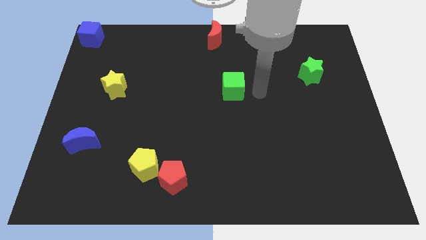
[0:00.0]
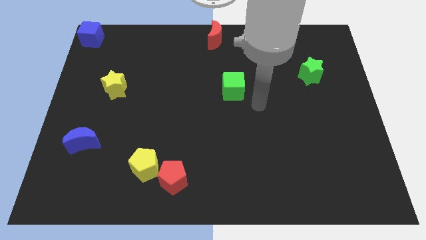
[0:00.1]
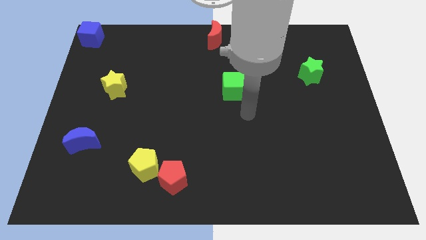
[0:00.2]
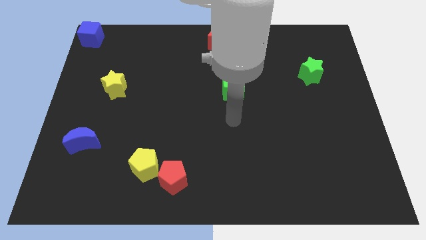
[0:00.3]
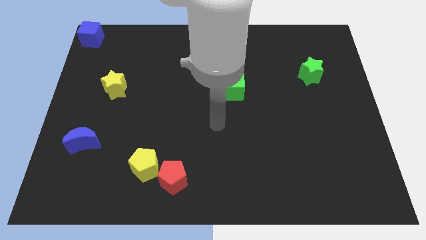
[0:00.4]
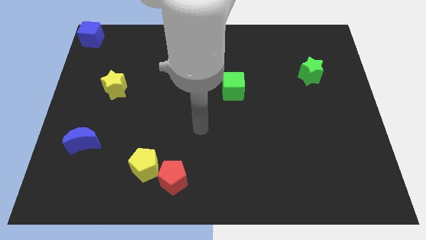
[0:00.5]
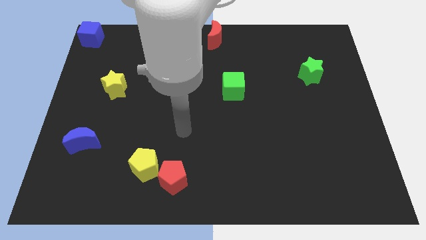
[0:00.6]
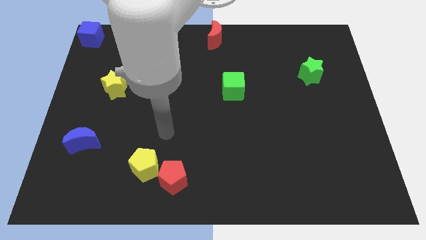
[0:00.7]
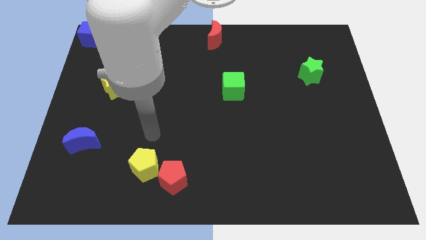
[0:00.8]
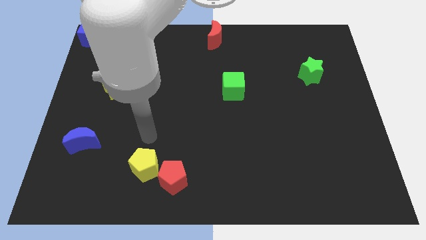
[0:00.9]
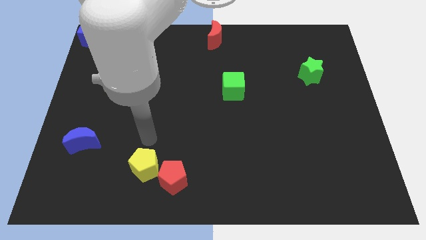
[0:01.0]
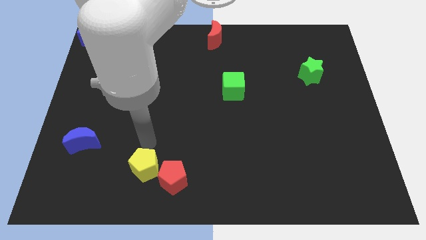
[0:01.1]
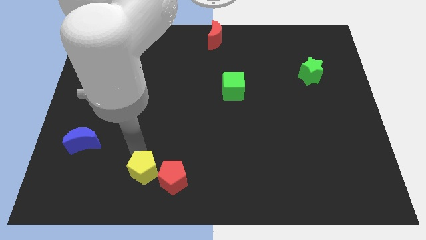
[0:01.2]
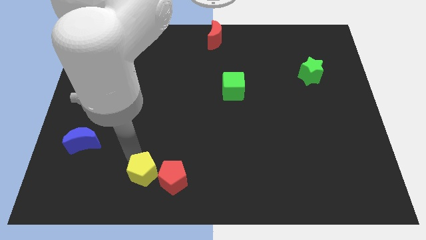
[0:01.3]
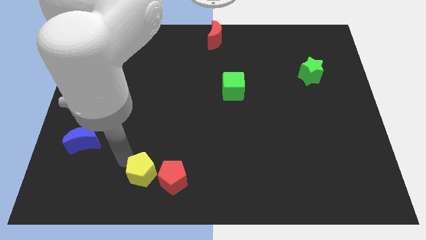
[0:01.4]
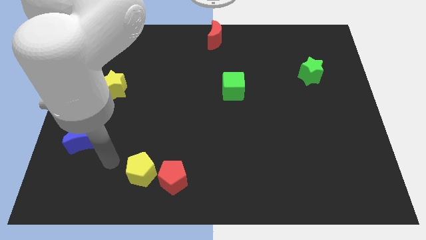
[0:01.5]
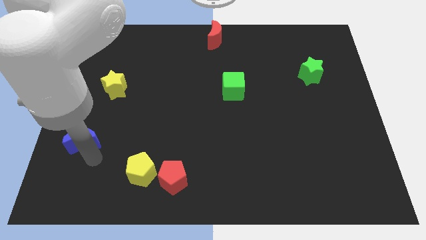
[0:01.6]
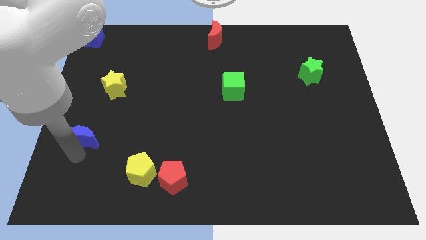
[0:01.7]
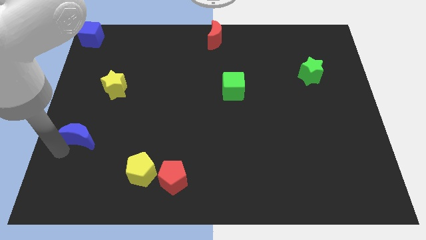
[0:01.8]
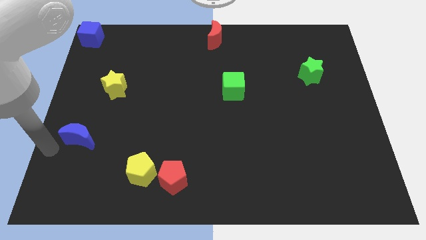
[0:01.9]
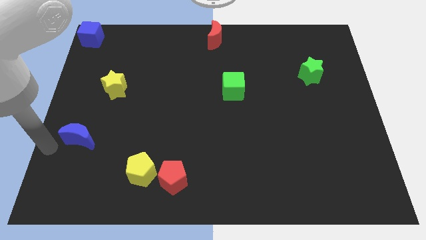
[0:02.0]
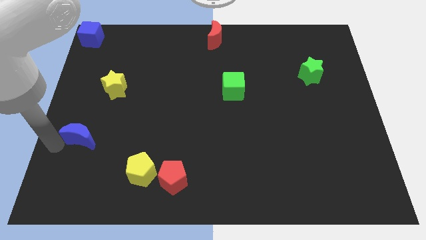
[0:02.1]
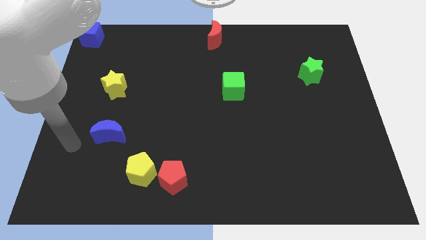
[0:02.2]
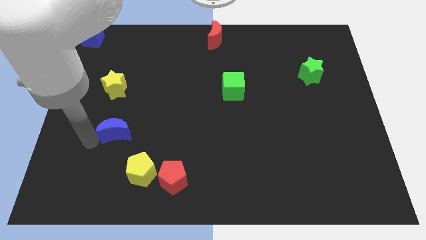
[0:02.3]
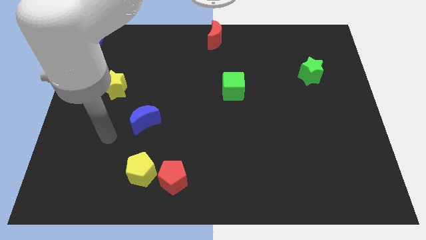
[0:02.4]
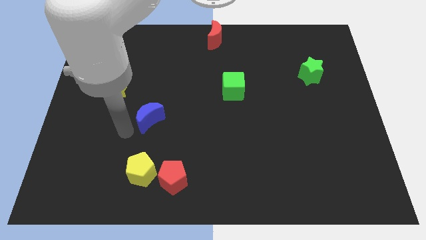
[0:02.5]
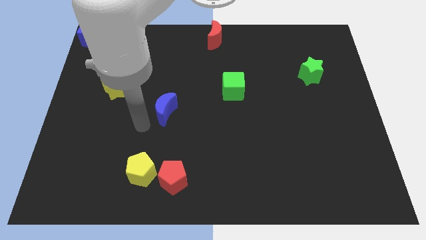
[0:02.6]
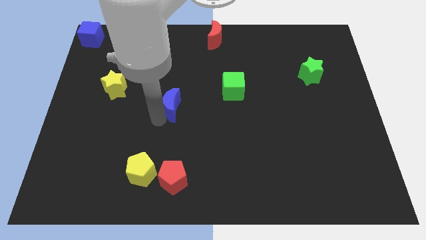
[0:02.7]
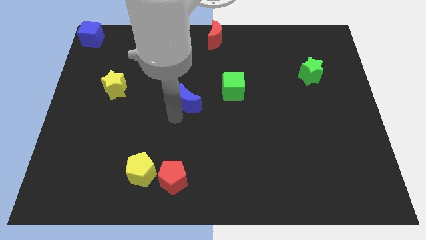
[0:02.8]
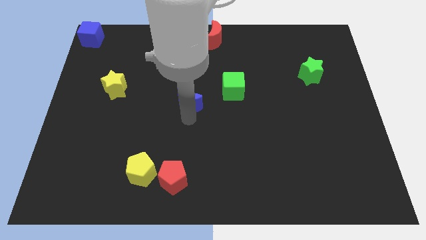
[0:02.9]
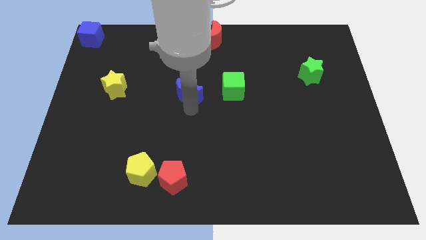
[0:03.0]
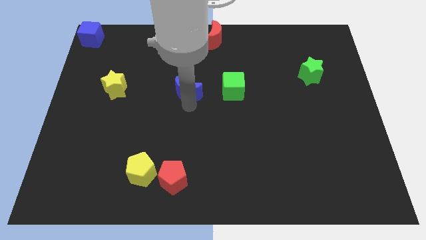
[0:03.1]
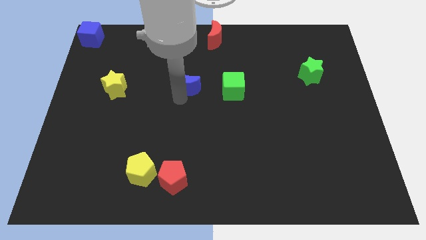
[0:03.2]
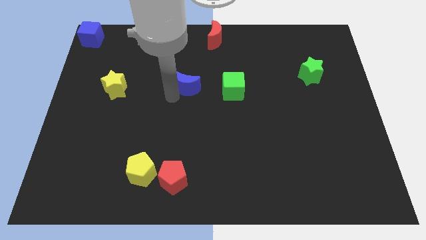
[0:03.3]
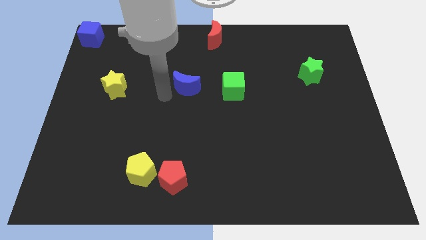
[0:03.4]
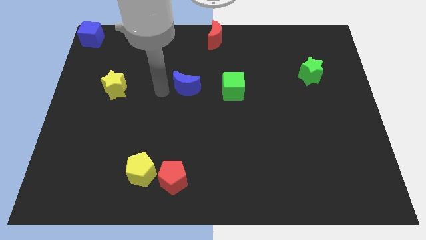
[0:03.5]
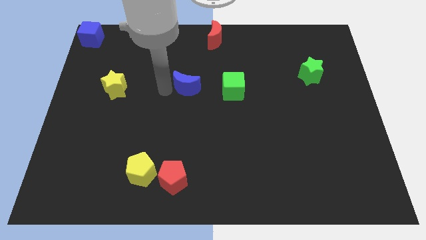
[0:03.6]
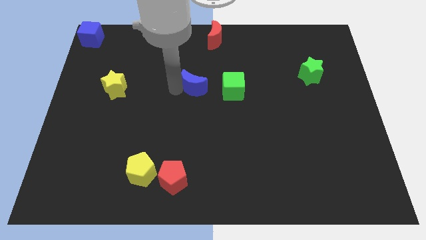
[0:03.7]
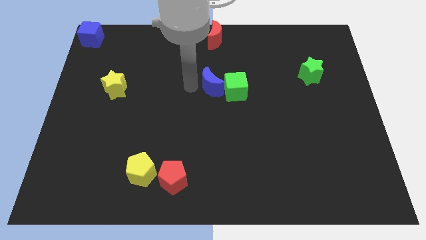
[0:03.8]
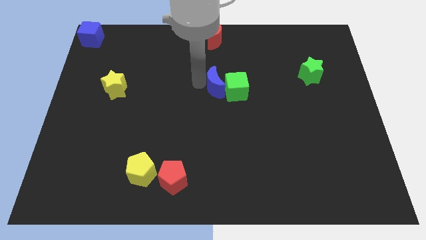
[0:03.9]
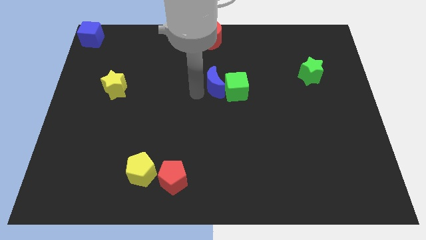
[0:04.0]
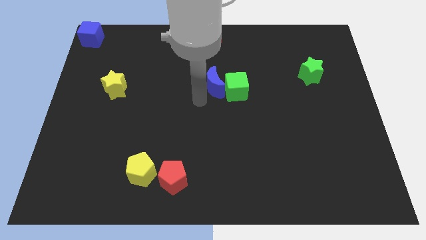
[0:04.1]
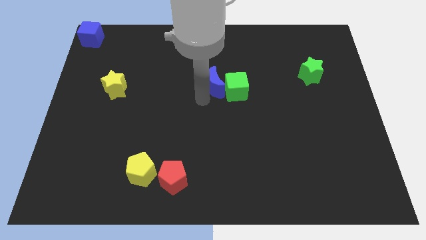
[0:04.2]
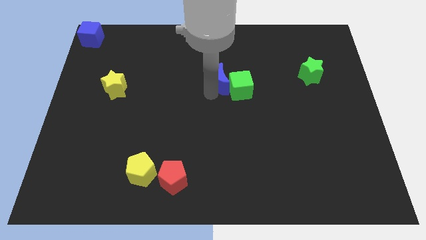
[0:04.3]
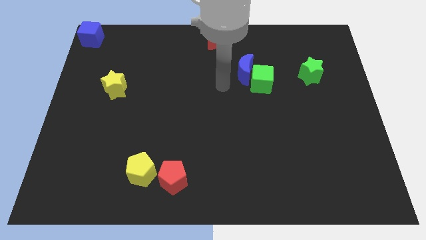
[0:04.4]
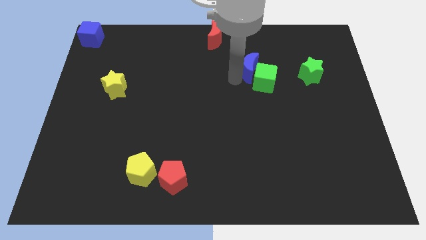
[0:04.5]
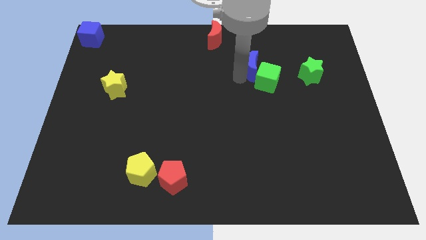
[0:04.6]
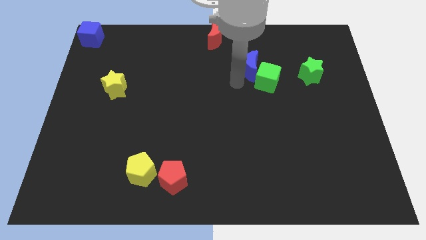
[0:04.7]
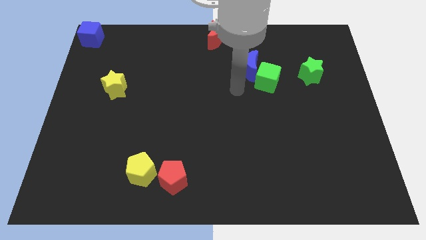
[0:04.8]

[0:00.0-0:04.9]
push blue moon into the green cube

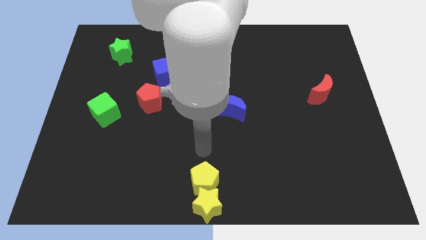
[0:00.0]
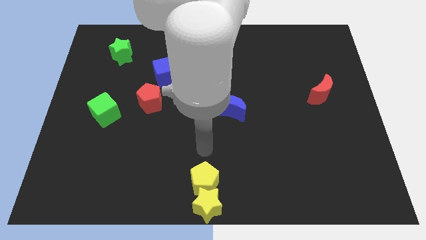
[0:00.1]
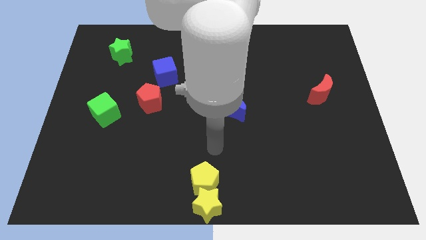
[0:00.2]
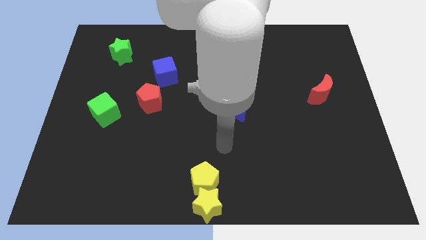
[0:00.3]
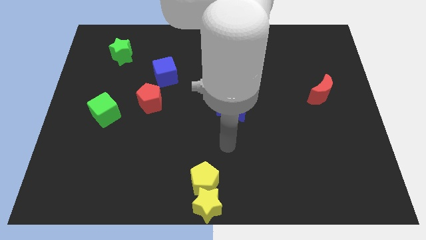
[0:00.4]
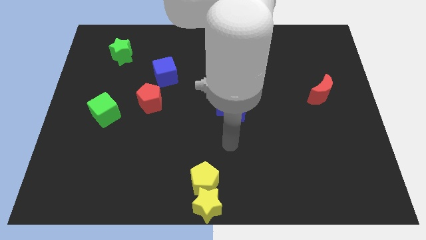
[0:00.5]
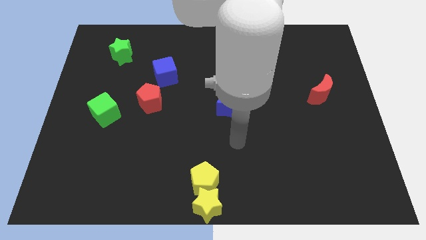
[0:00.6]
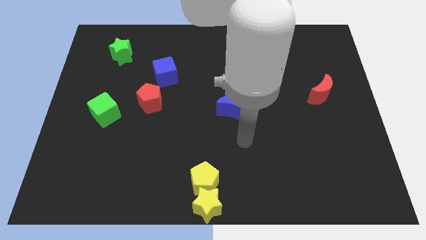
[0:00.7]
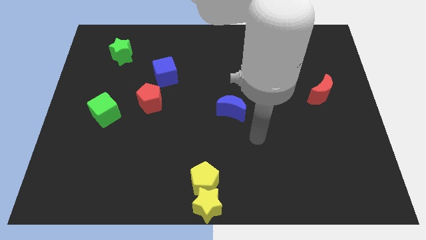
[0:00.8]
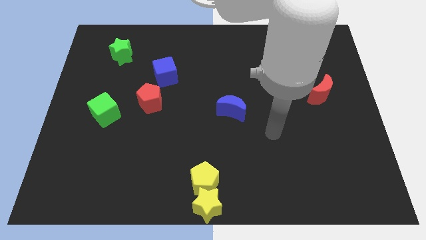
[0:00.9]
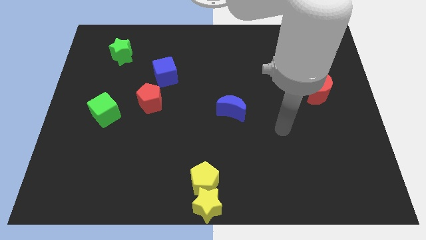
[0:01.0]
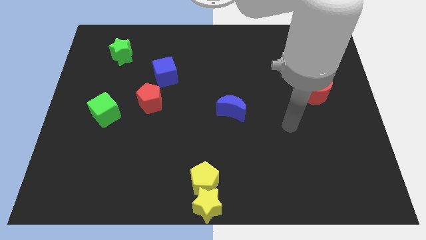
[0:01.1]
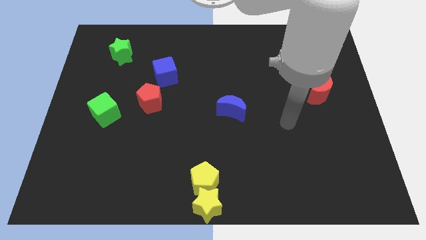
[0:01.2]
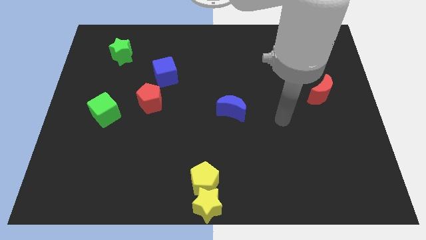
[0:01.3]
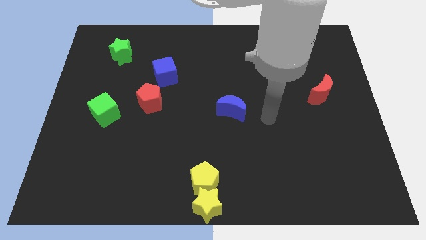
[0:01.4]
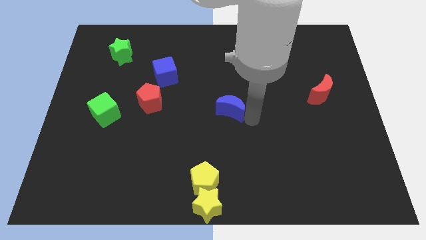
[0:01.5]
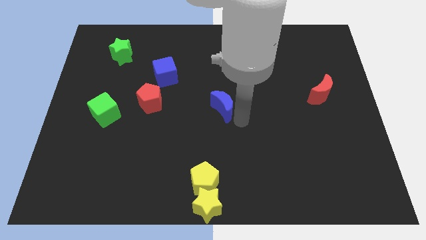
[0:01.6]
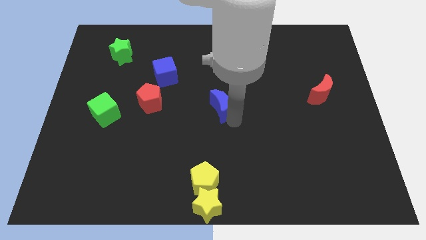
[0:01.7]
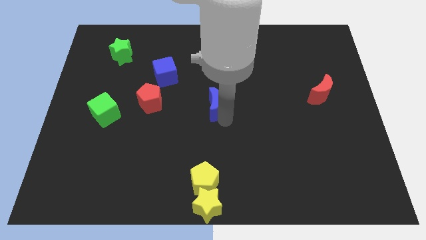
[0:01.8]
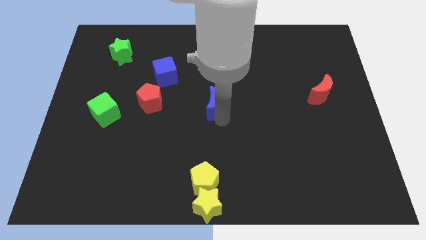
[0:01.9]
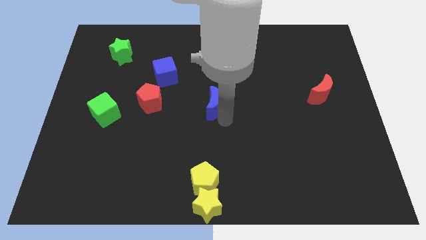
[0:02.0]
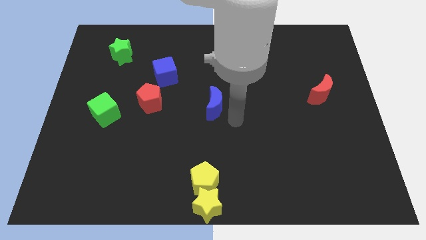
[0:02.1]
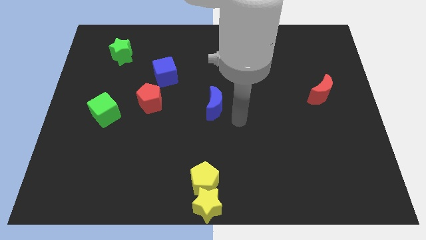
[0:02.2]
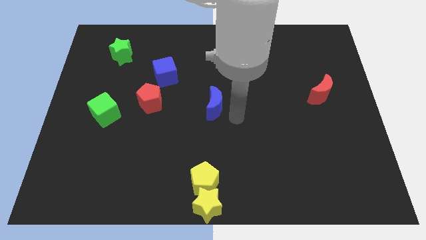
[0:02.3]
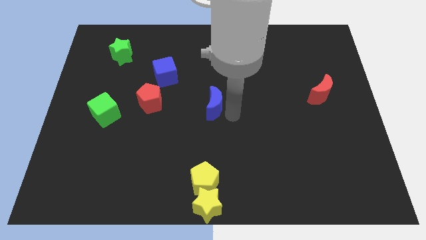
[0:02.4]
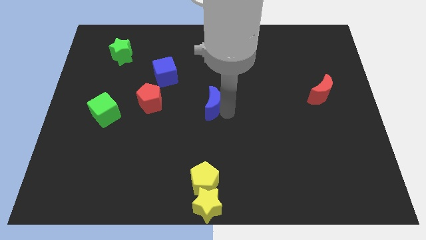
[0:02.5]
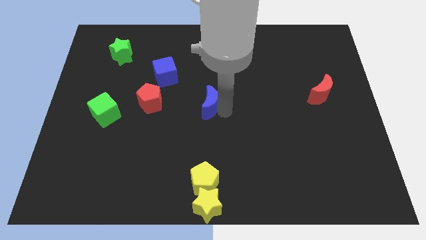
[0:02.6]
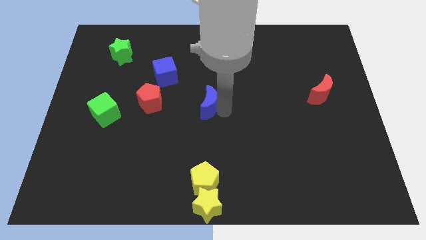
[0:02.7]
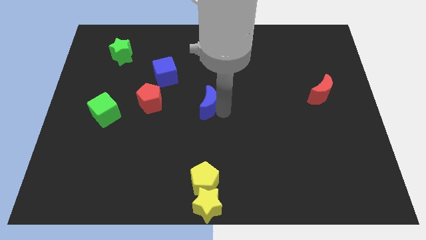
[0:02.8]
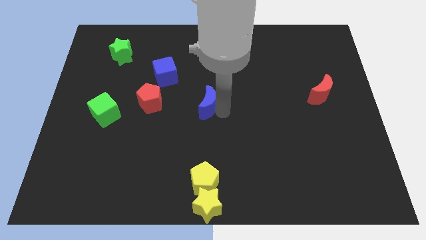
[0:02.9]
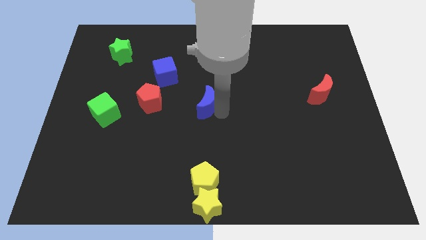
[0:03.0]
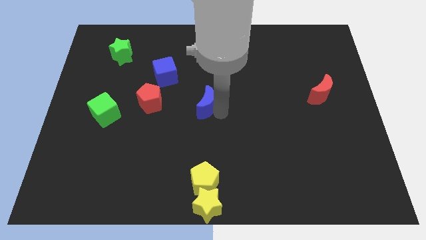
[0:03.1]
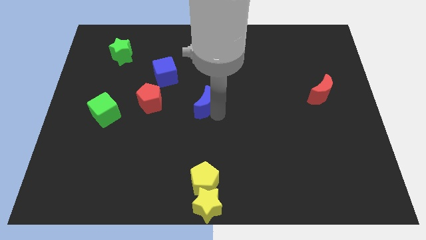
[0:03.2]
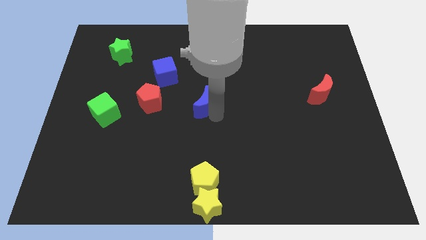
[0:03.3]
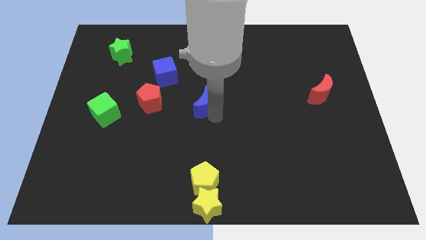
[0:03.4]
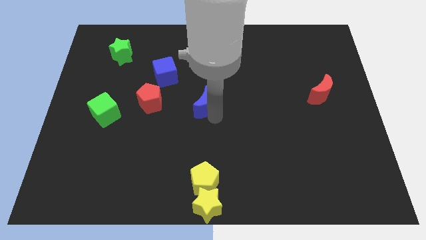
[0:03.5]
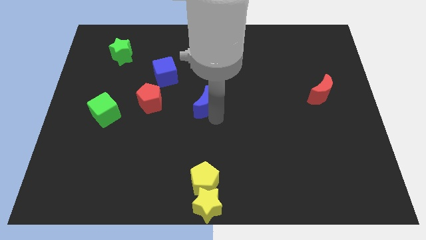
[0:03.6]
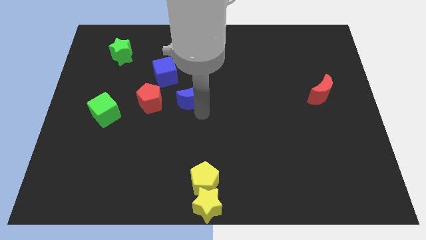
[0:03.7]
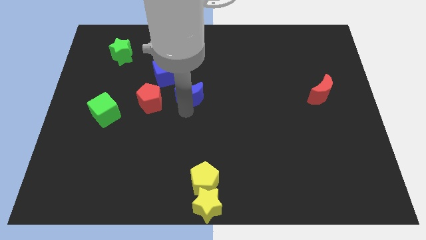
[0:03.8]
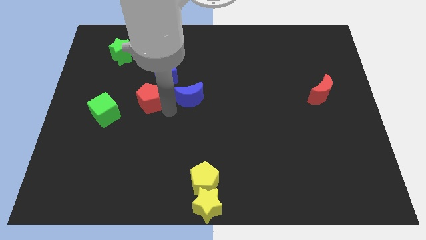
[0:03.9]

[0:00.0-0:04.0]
push the blue moon to the right of the red pentagon

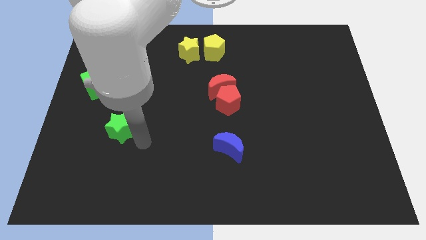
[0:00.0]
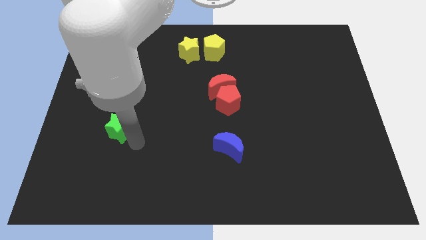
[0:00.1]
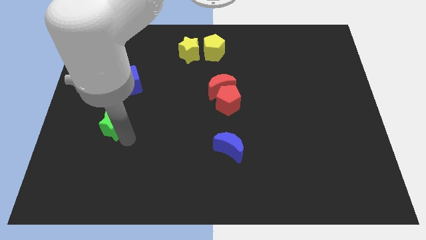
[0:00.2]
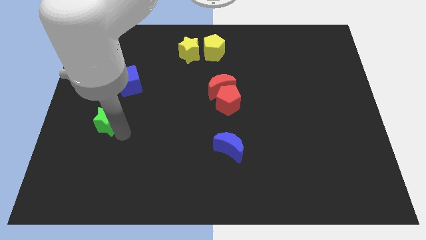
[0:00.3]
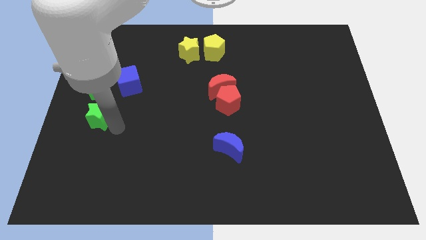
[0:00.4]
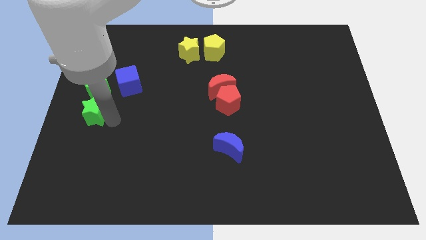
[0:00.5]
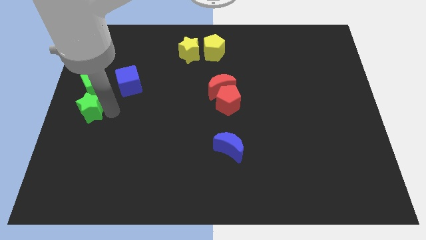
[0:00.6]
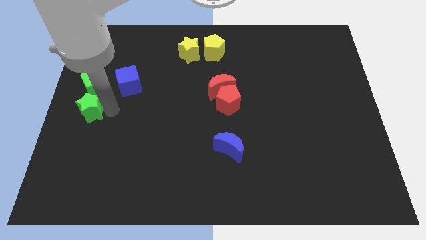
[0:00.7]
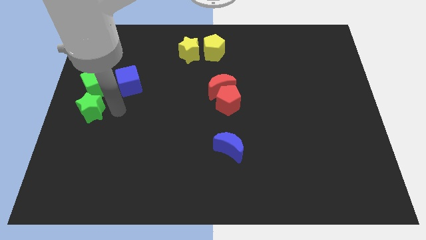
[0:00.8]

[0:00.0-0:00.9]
push the green star to the bottom side of the green cube
